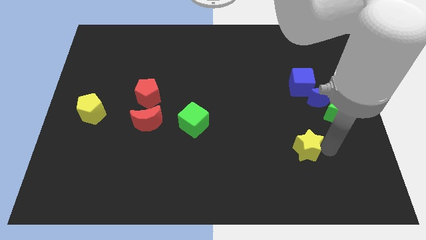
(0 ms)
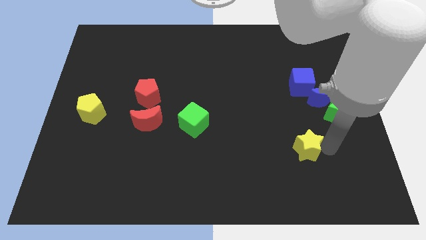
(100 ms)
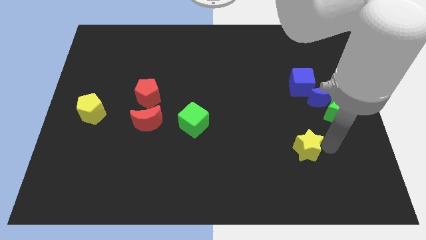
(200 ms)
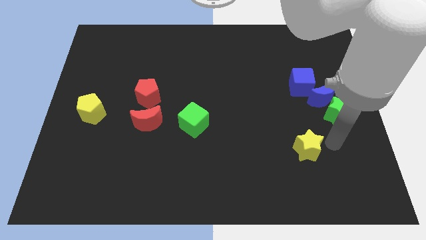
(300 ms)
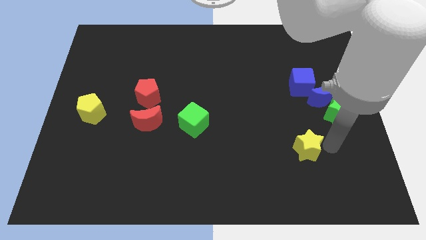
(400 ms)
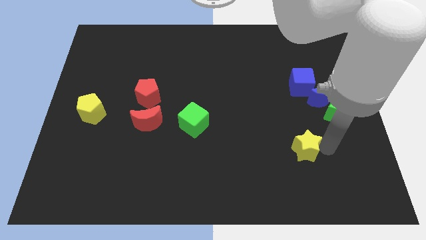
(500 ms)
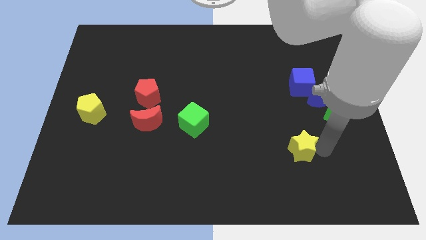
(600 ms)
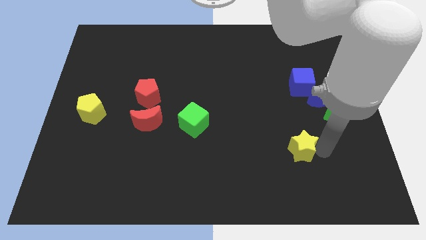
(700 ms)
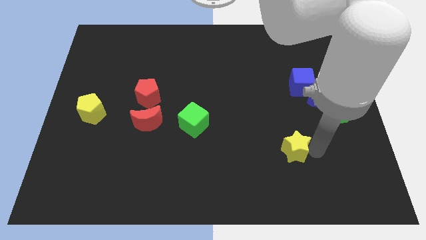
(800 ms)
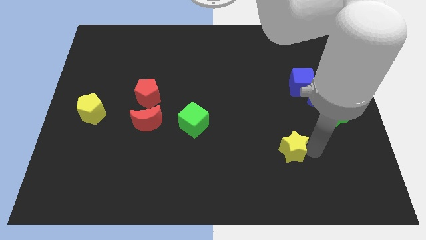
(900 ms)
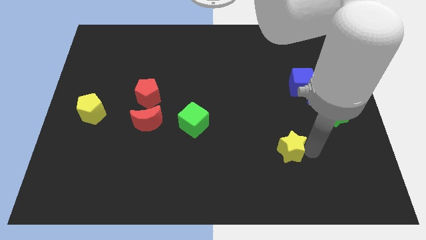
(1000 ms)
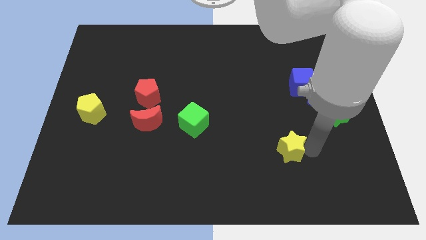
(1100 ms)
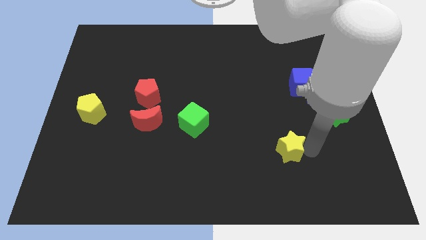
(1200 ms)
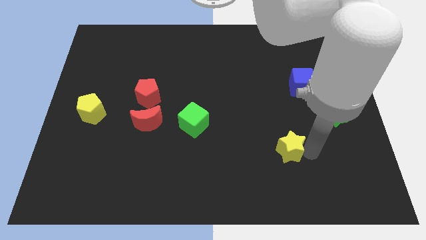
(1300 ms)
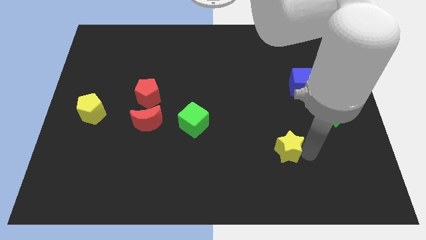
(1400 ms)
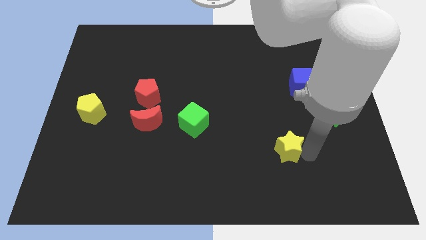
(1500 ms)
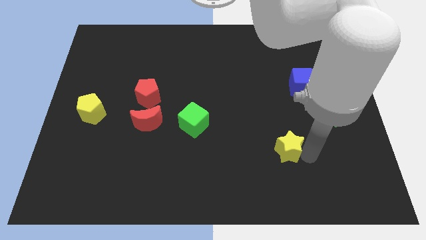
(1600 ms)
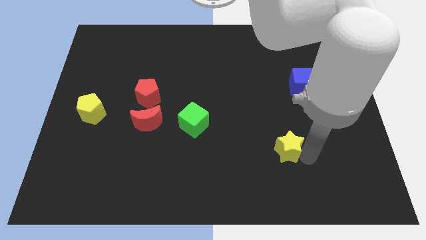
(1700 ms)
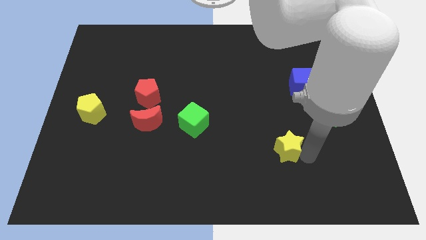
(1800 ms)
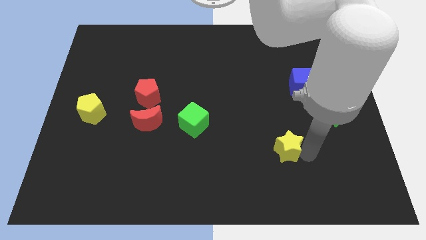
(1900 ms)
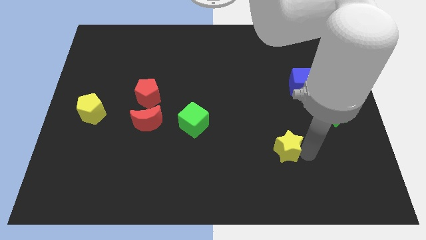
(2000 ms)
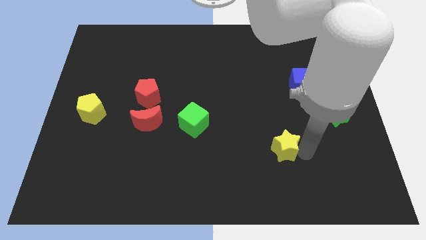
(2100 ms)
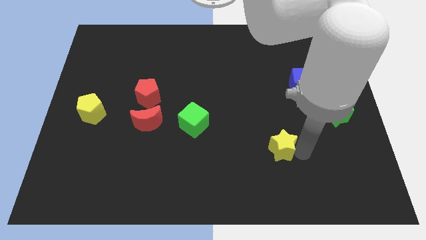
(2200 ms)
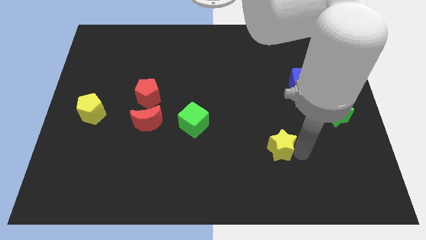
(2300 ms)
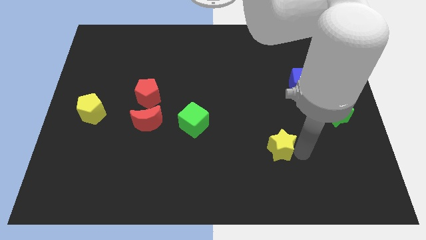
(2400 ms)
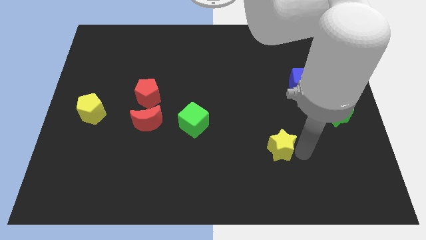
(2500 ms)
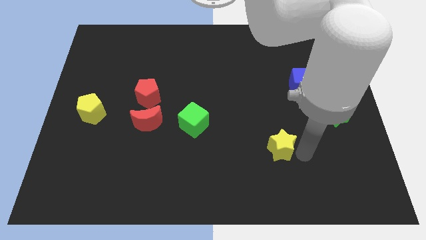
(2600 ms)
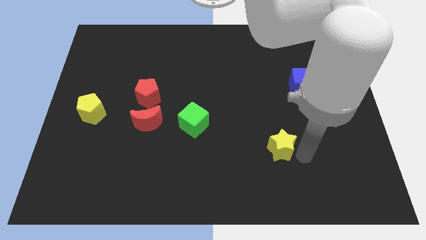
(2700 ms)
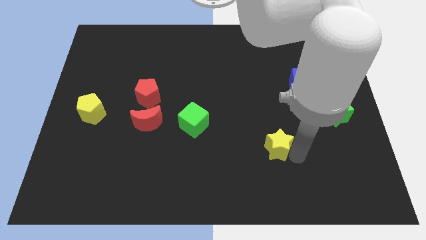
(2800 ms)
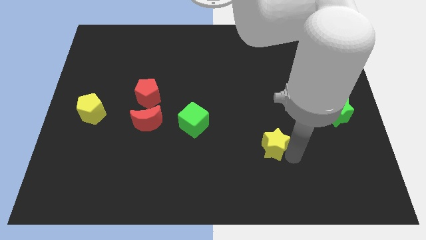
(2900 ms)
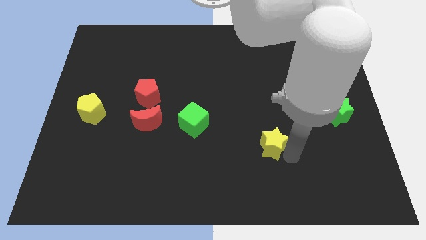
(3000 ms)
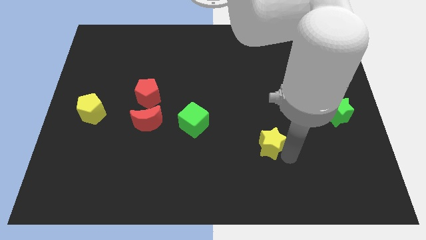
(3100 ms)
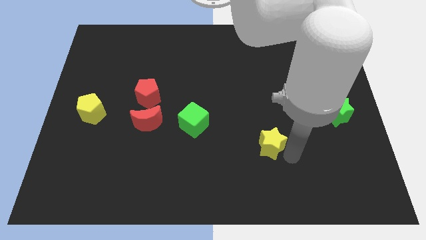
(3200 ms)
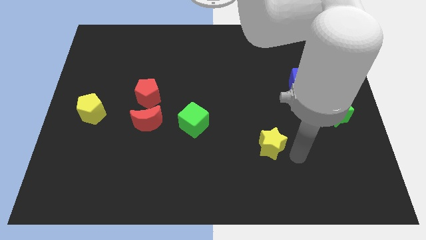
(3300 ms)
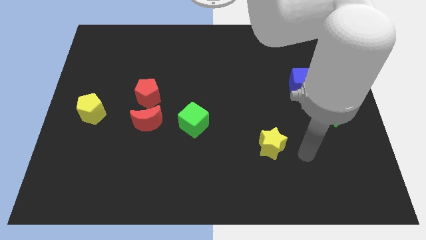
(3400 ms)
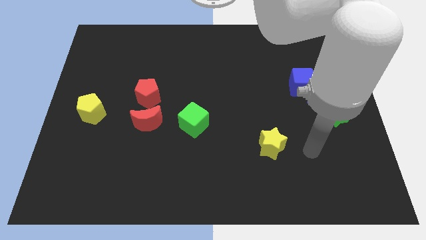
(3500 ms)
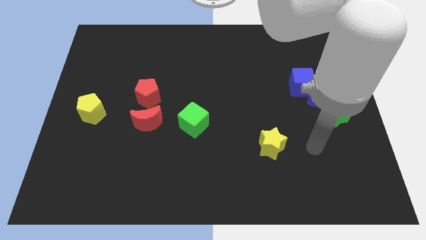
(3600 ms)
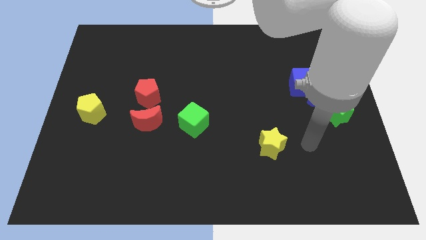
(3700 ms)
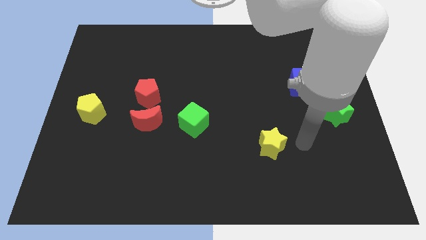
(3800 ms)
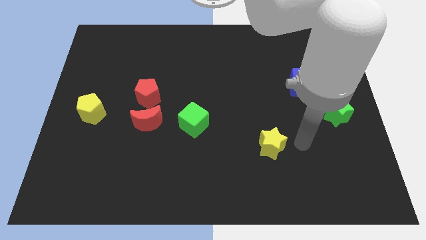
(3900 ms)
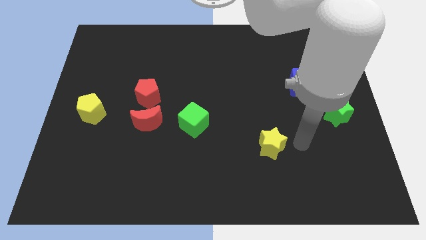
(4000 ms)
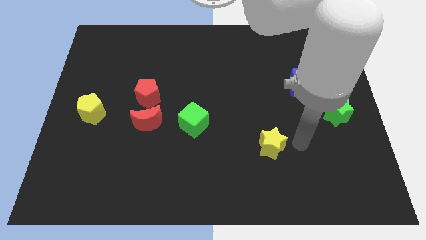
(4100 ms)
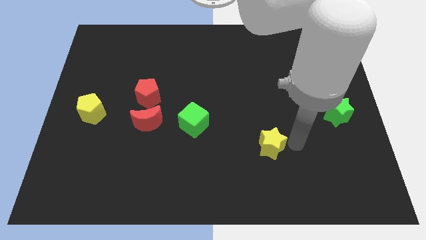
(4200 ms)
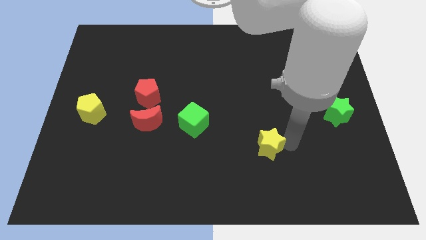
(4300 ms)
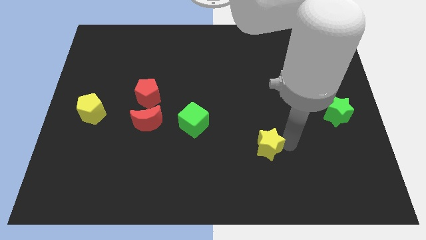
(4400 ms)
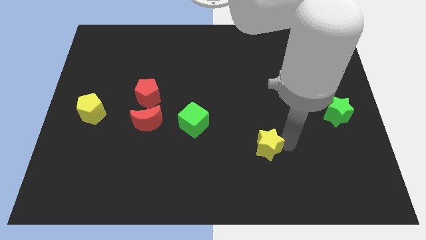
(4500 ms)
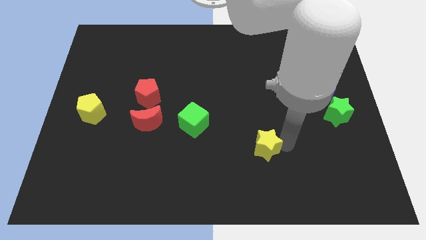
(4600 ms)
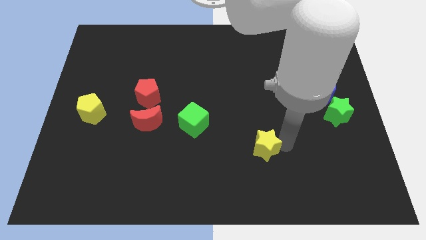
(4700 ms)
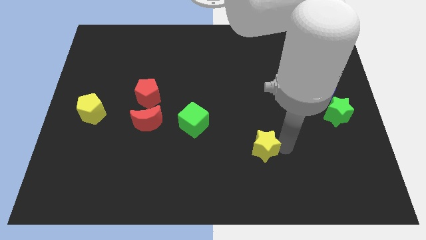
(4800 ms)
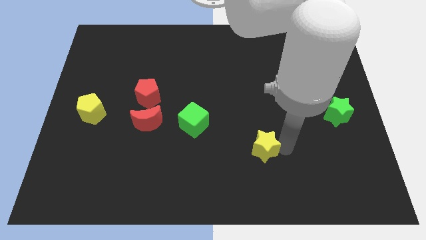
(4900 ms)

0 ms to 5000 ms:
push the yellow star to the left side of the table

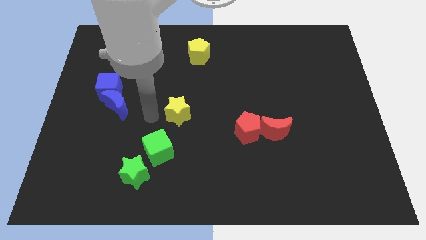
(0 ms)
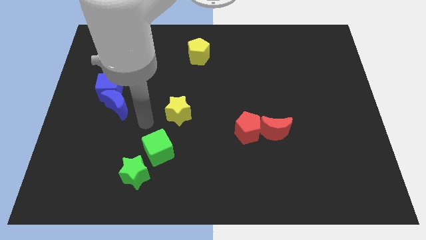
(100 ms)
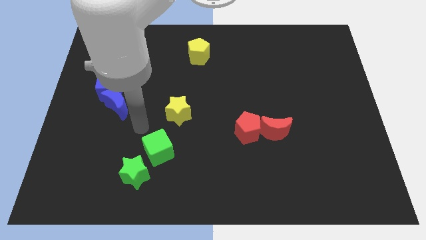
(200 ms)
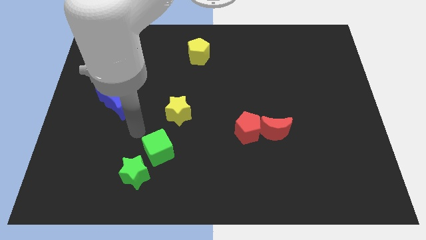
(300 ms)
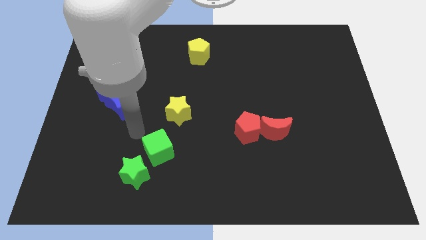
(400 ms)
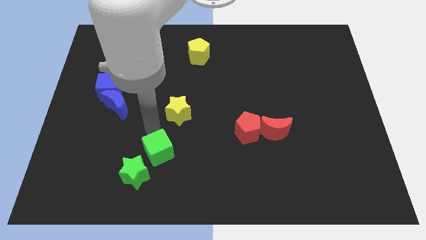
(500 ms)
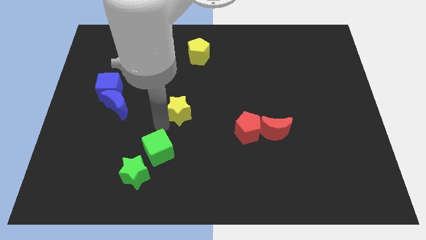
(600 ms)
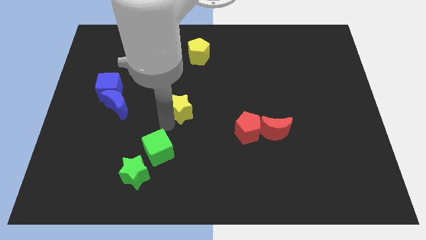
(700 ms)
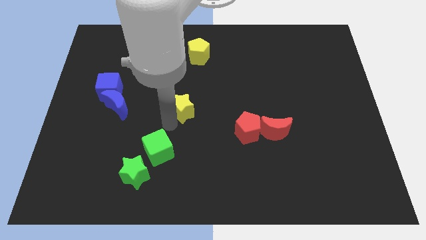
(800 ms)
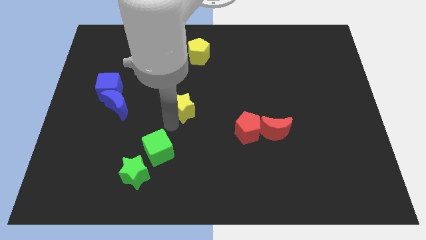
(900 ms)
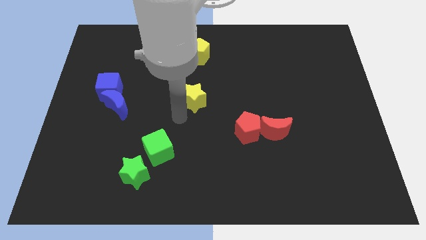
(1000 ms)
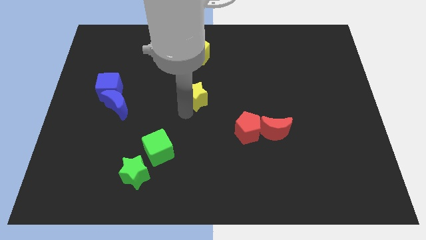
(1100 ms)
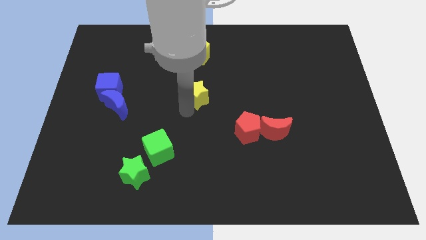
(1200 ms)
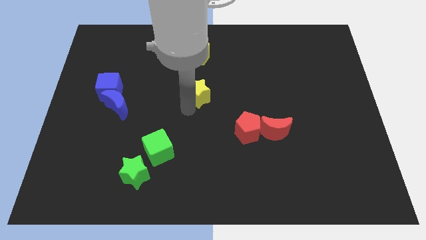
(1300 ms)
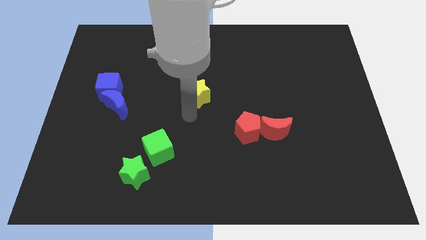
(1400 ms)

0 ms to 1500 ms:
push the yellow star to the center of the board

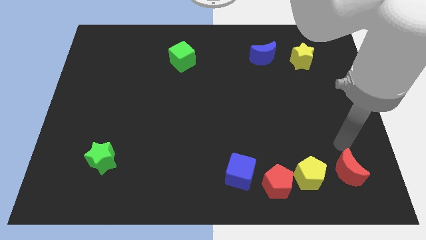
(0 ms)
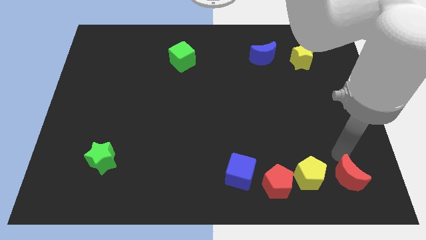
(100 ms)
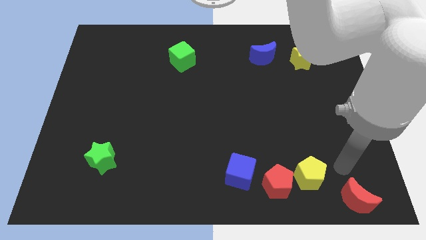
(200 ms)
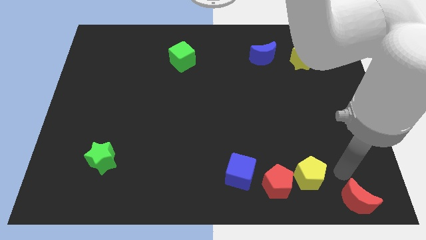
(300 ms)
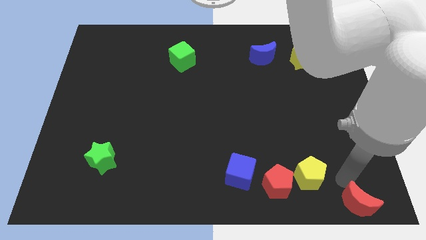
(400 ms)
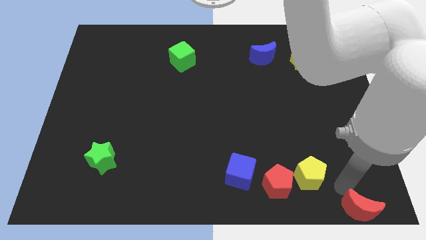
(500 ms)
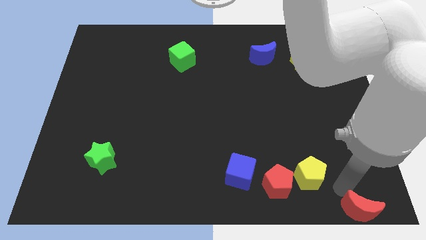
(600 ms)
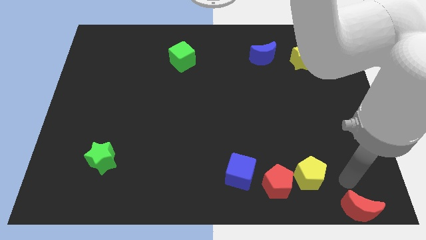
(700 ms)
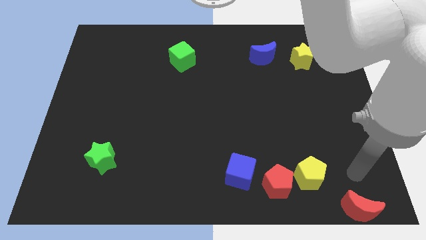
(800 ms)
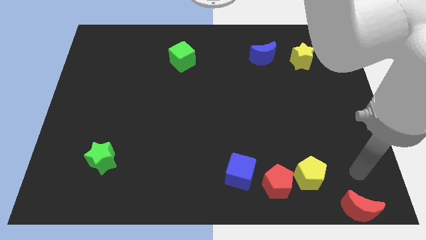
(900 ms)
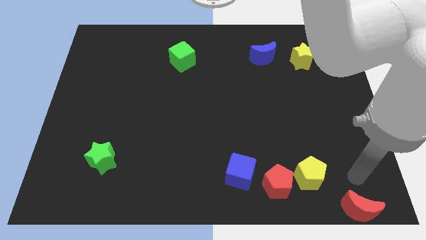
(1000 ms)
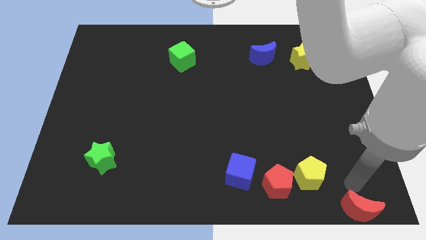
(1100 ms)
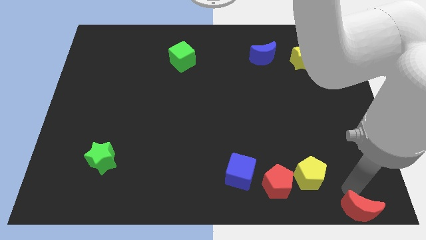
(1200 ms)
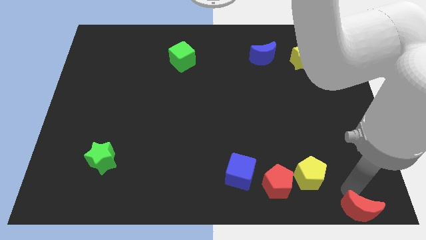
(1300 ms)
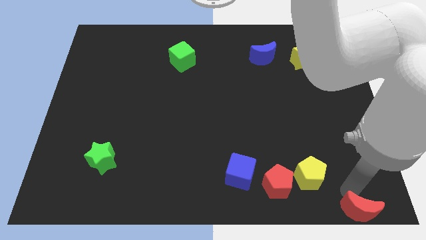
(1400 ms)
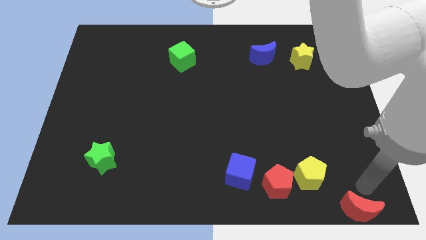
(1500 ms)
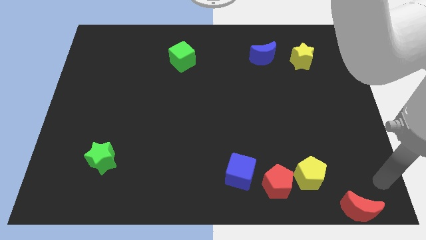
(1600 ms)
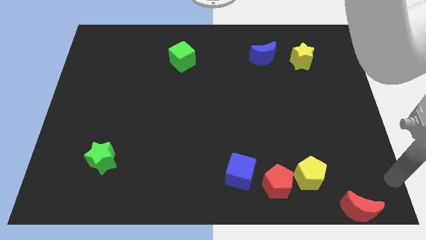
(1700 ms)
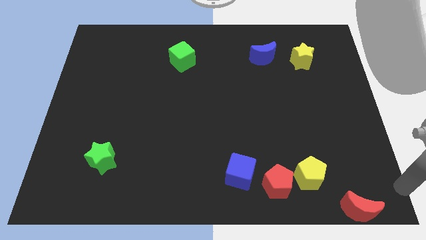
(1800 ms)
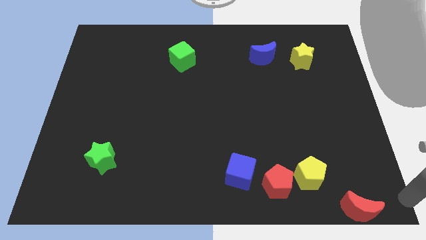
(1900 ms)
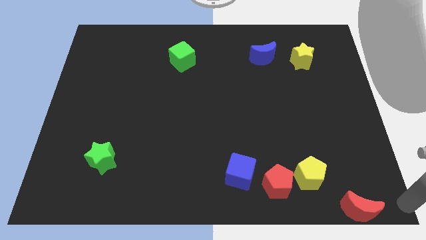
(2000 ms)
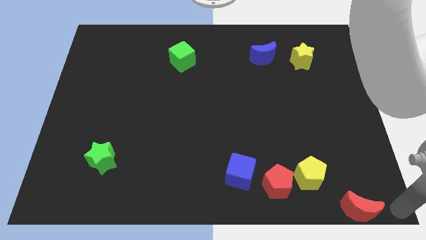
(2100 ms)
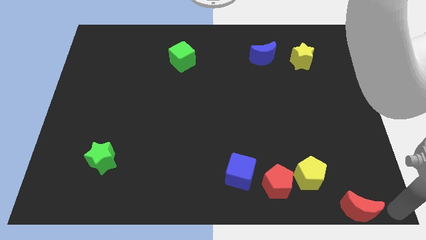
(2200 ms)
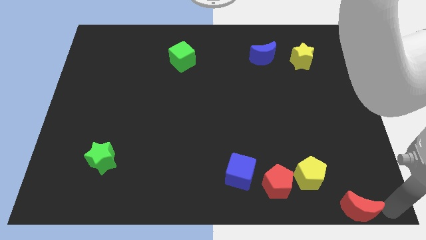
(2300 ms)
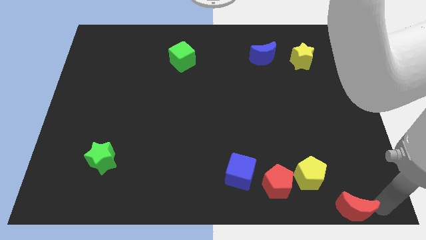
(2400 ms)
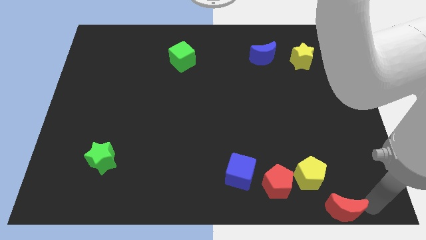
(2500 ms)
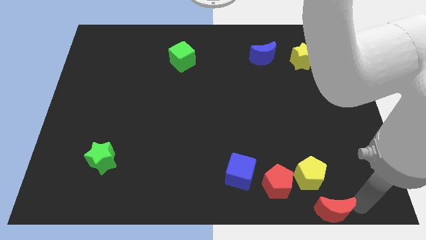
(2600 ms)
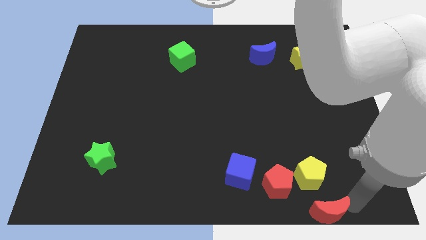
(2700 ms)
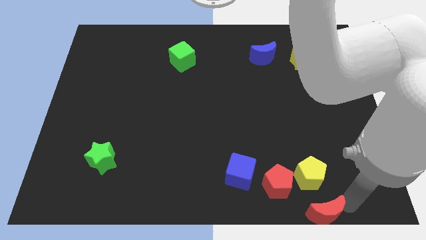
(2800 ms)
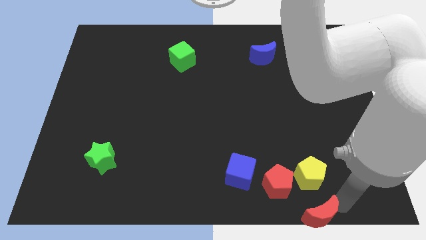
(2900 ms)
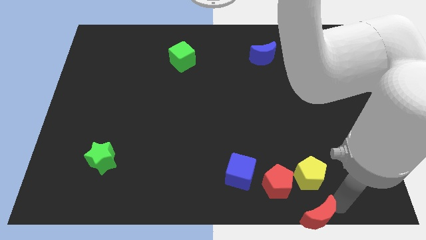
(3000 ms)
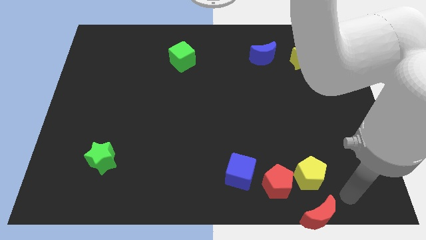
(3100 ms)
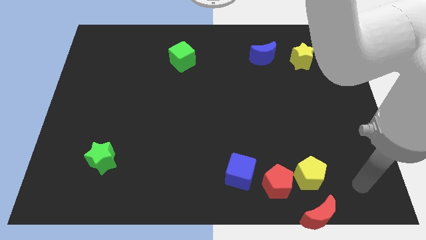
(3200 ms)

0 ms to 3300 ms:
place the red crescent below the yellow pentagon
